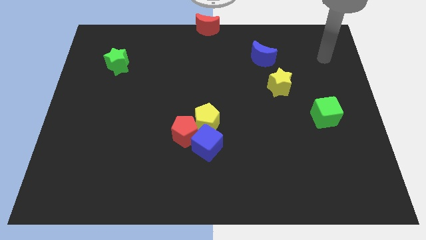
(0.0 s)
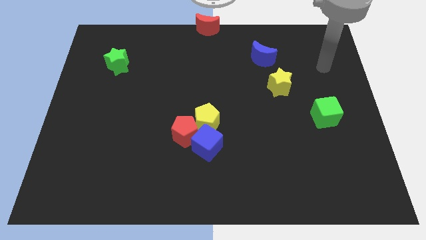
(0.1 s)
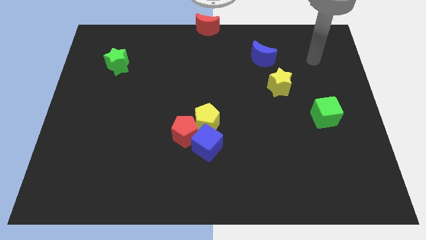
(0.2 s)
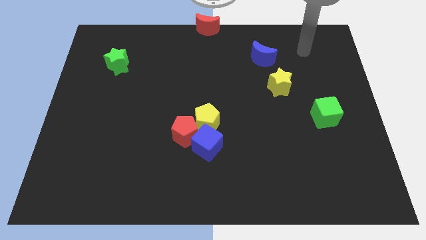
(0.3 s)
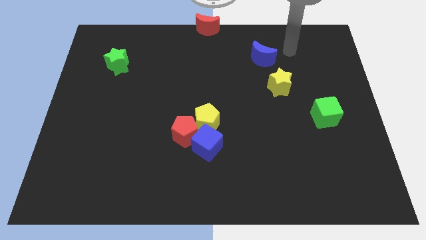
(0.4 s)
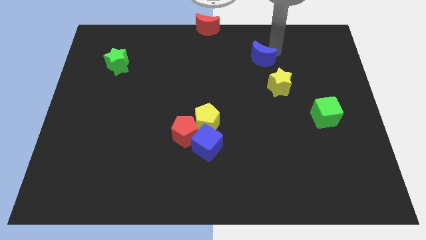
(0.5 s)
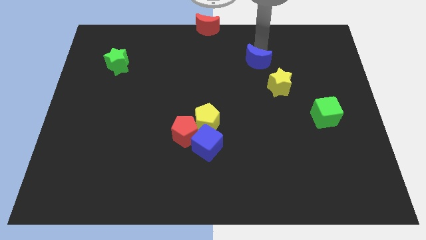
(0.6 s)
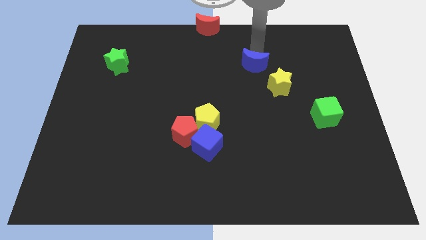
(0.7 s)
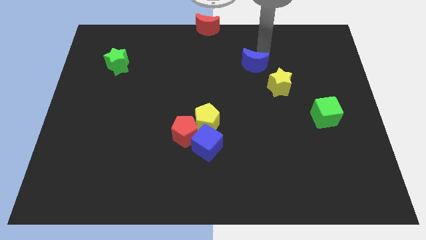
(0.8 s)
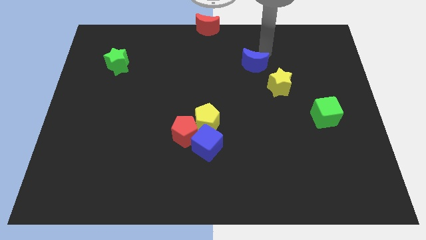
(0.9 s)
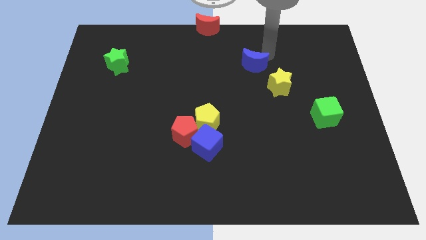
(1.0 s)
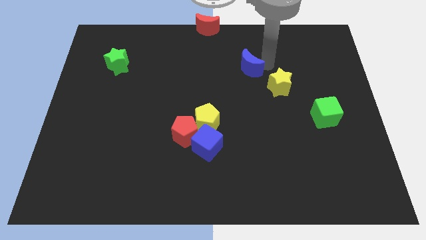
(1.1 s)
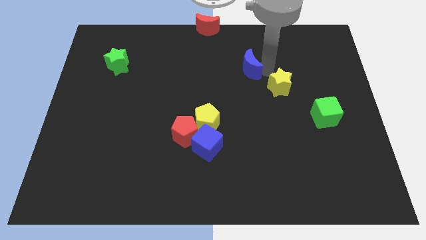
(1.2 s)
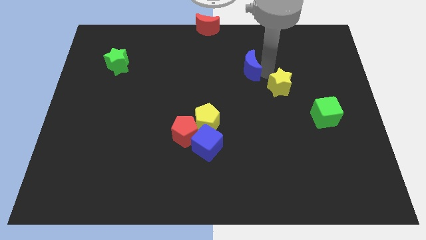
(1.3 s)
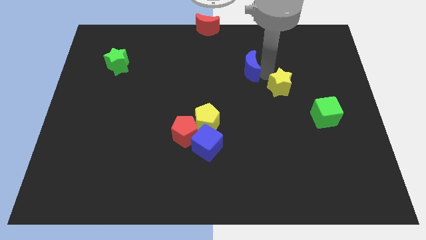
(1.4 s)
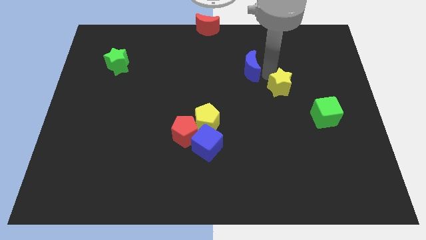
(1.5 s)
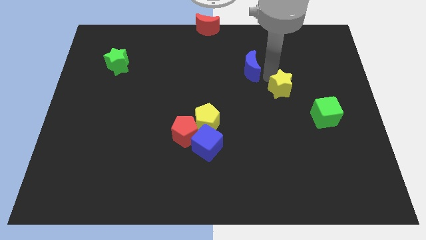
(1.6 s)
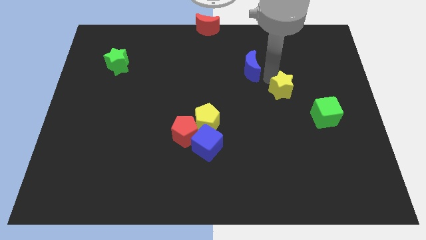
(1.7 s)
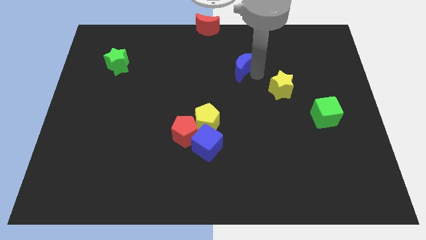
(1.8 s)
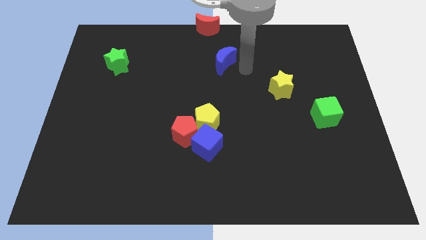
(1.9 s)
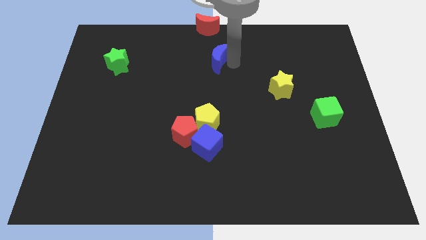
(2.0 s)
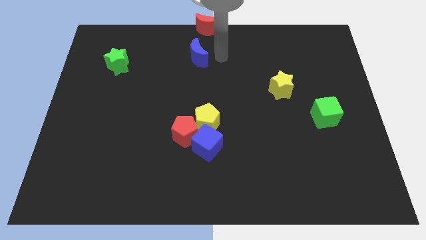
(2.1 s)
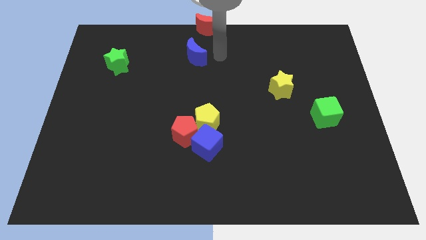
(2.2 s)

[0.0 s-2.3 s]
place blue moon diagonal to the yellow star

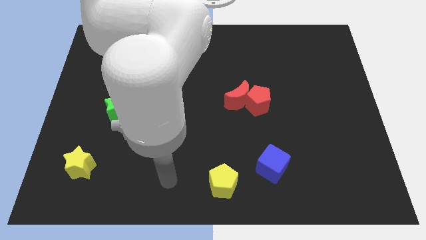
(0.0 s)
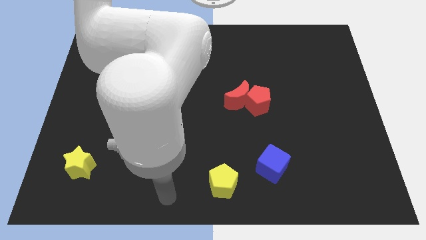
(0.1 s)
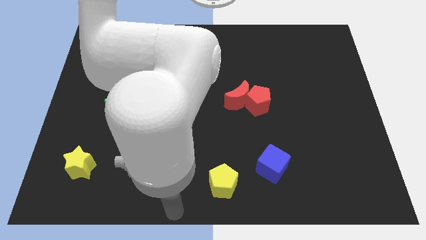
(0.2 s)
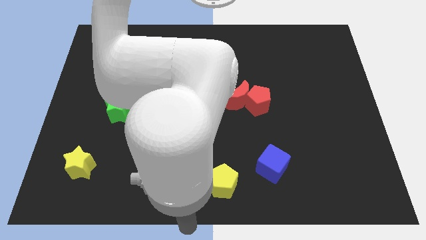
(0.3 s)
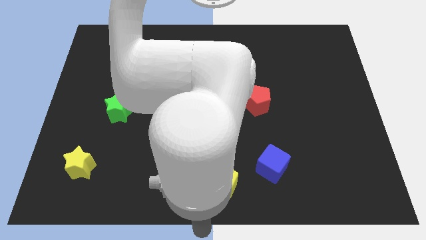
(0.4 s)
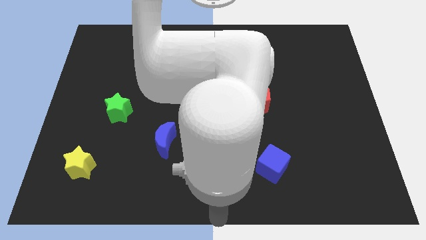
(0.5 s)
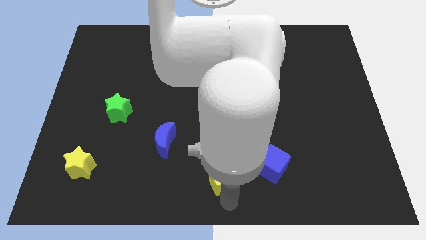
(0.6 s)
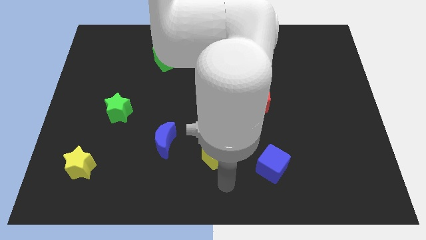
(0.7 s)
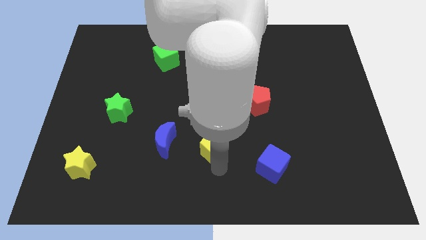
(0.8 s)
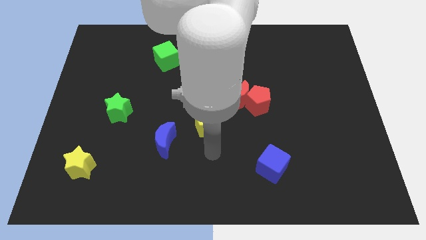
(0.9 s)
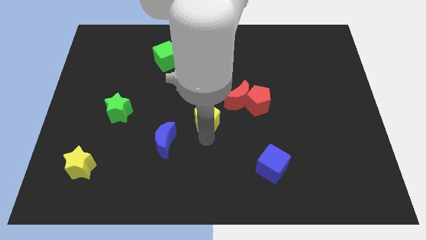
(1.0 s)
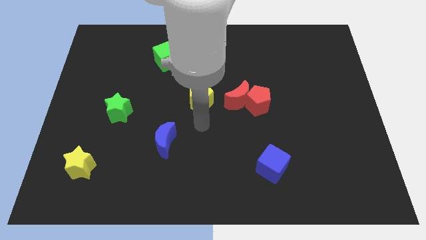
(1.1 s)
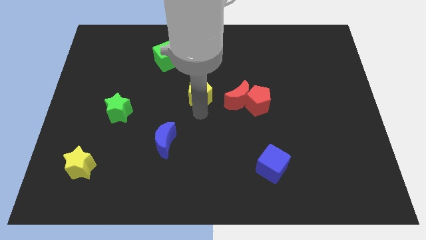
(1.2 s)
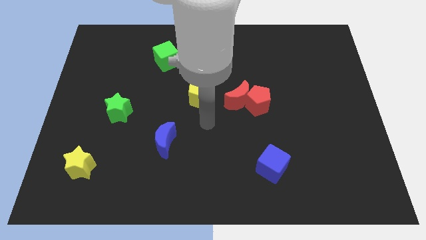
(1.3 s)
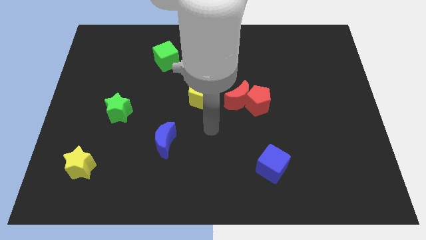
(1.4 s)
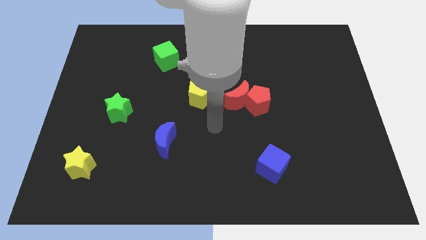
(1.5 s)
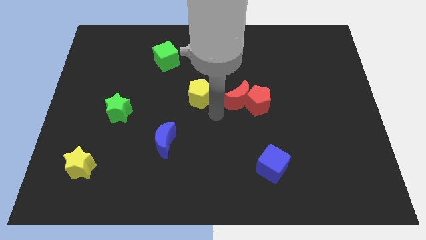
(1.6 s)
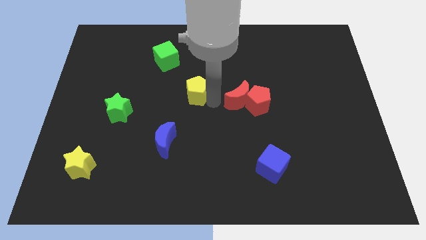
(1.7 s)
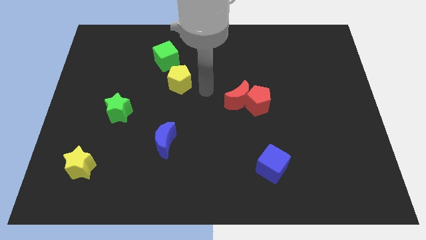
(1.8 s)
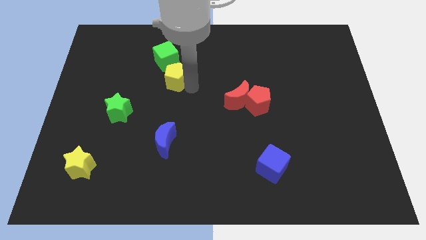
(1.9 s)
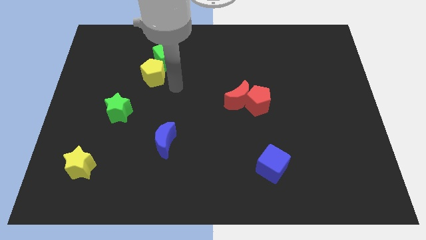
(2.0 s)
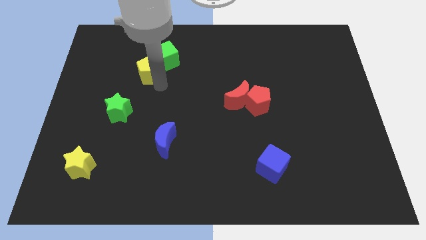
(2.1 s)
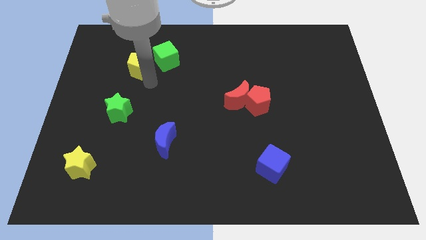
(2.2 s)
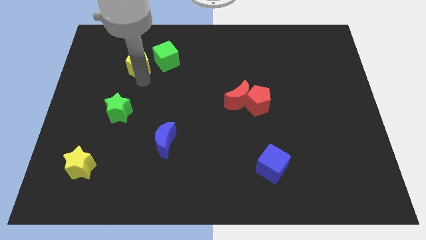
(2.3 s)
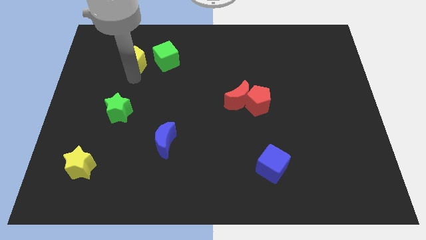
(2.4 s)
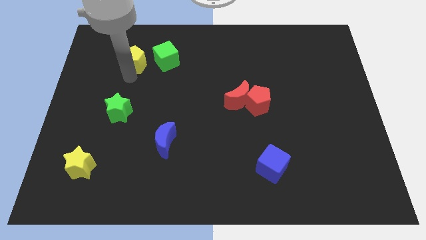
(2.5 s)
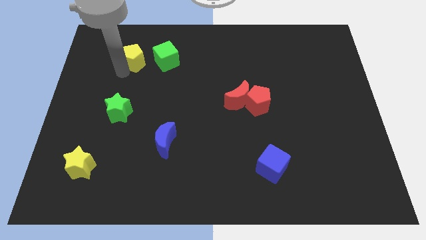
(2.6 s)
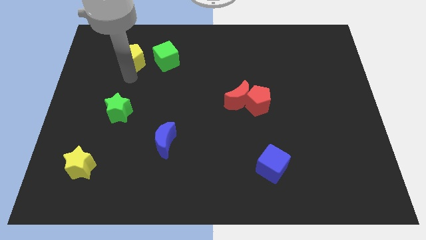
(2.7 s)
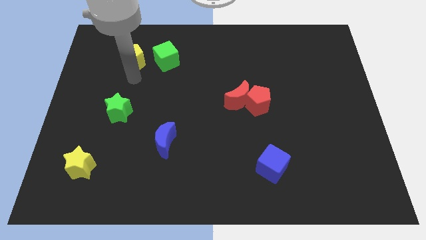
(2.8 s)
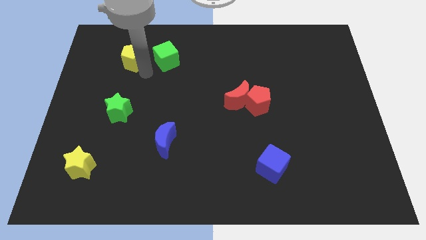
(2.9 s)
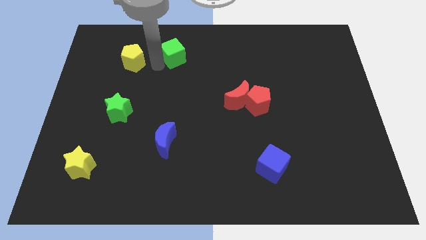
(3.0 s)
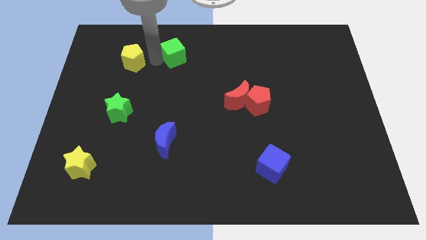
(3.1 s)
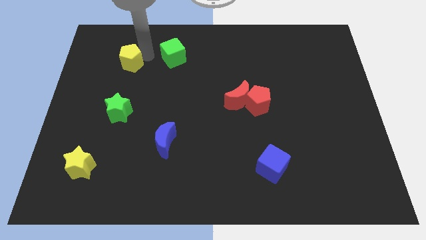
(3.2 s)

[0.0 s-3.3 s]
push yellow pentagon towards the top left

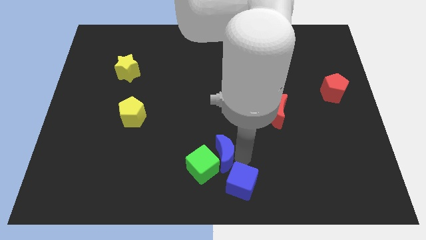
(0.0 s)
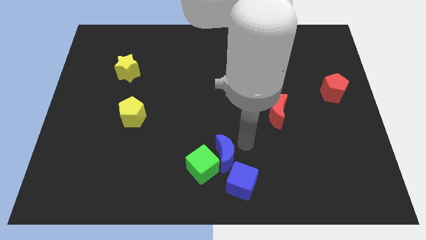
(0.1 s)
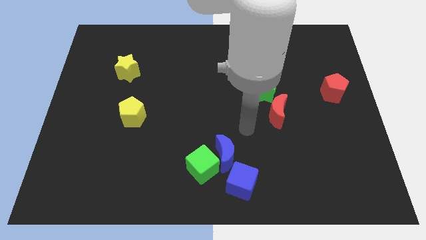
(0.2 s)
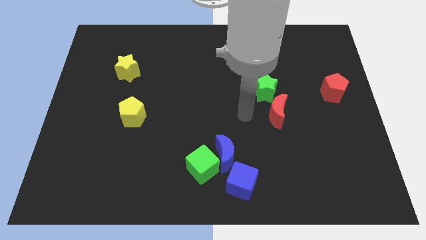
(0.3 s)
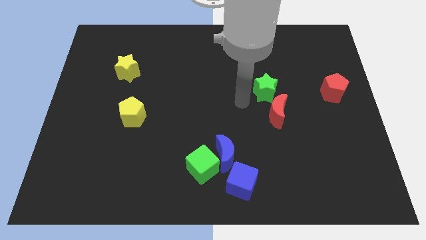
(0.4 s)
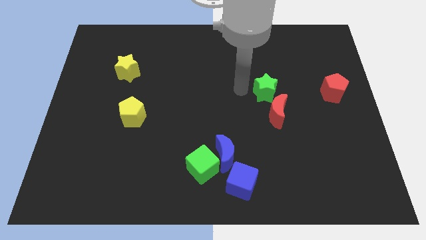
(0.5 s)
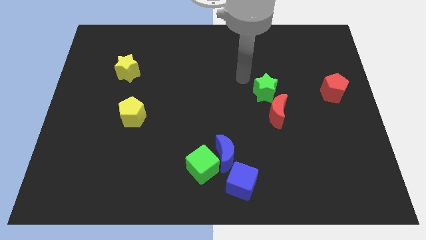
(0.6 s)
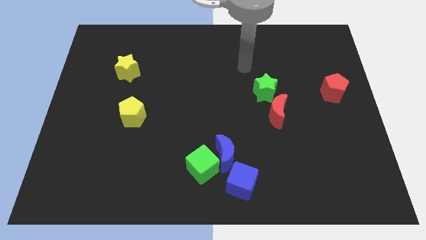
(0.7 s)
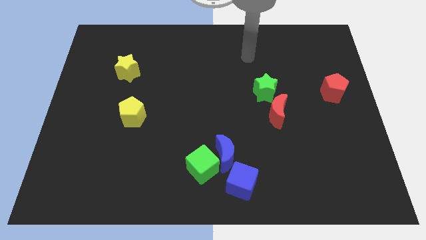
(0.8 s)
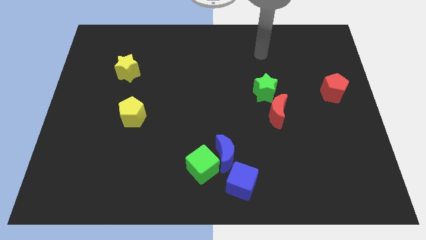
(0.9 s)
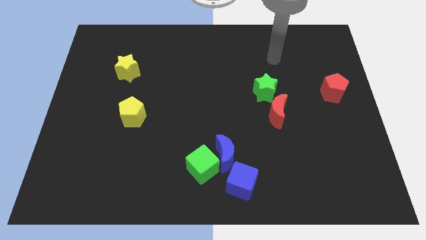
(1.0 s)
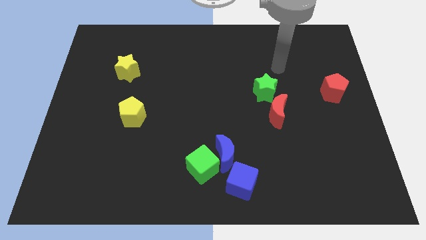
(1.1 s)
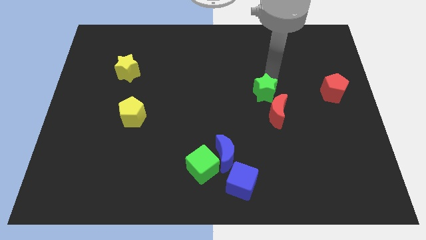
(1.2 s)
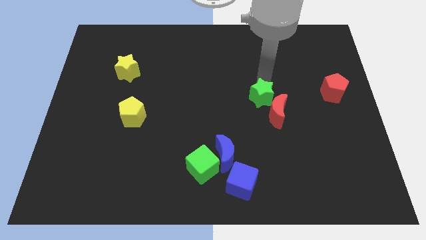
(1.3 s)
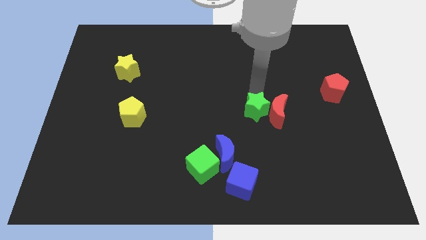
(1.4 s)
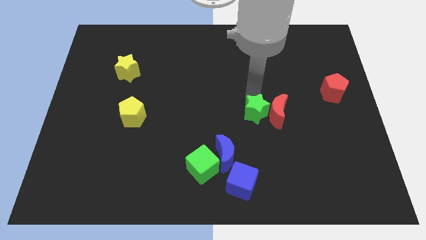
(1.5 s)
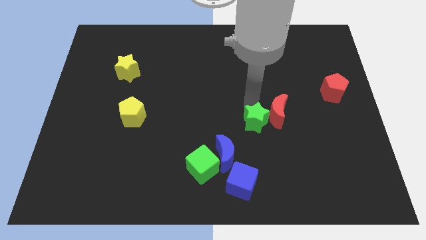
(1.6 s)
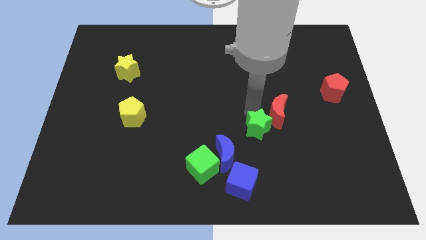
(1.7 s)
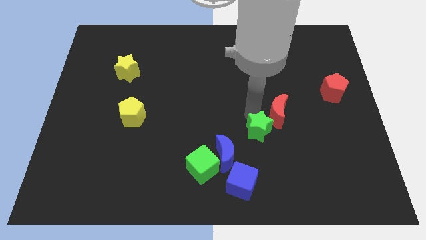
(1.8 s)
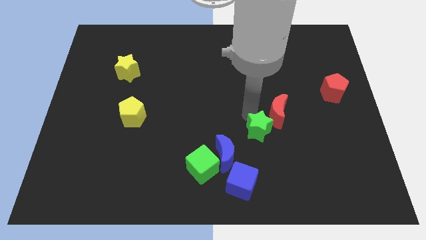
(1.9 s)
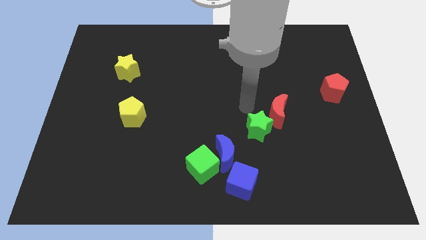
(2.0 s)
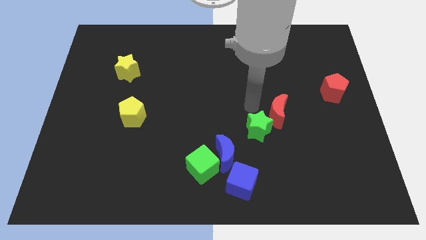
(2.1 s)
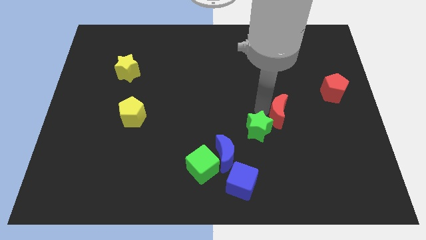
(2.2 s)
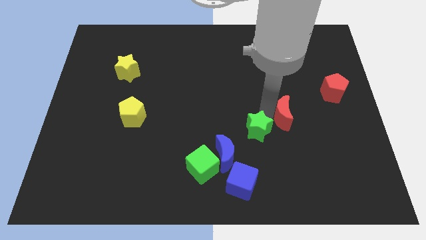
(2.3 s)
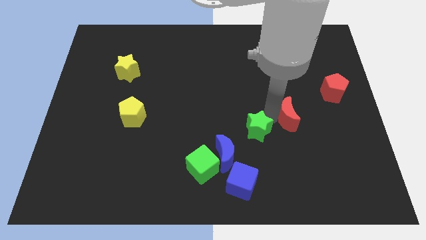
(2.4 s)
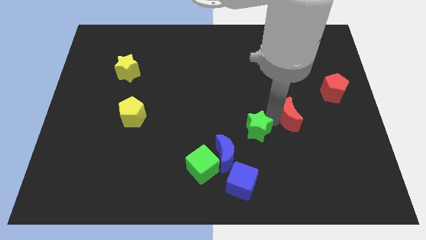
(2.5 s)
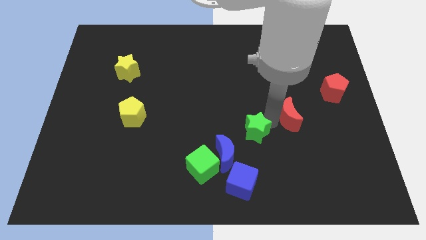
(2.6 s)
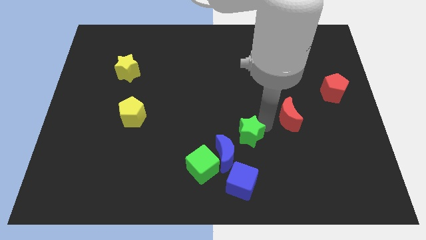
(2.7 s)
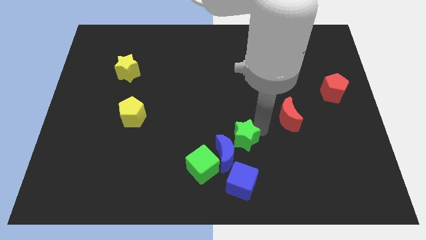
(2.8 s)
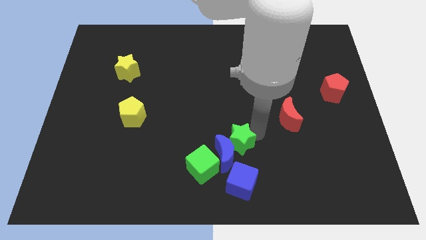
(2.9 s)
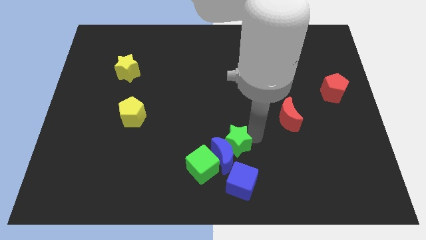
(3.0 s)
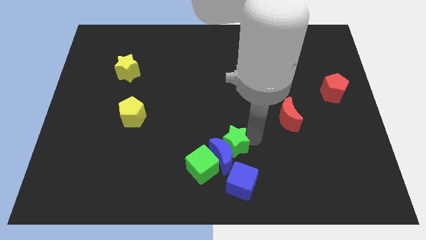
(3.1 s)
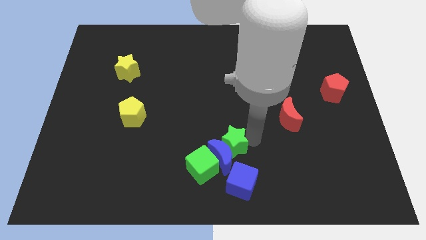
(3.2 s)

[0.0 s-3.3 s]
move the green star into the blue crescent
